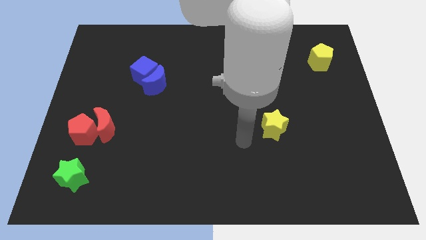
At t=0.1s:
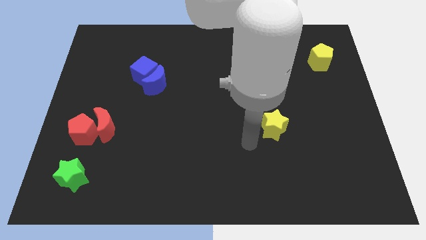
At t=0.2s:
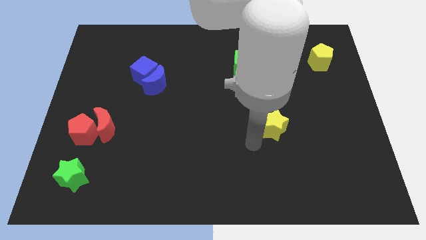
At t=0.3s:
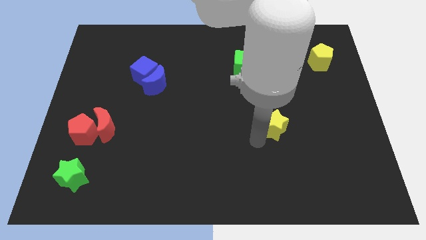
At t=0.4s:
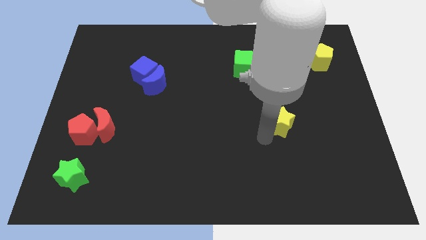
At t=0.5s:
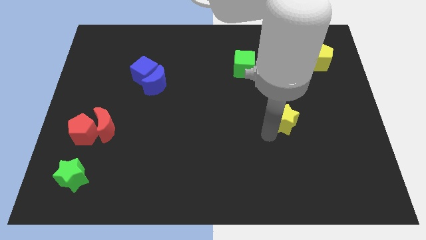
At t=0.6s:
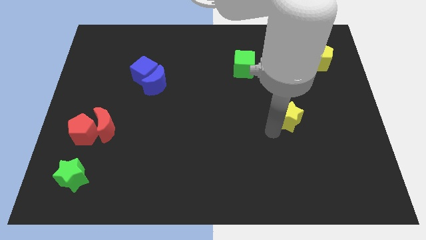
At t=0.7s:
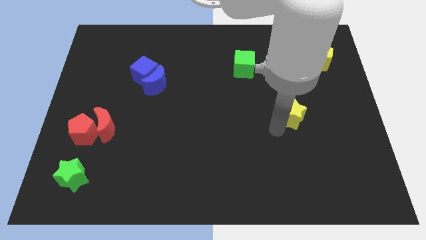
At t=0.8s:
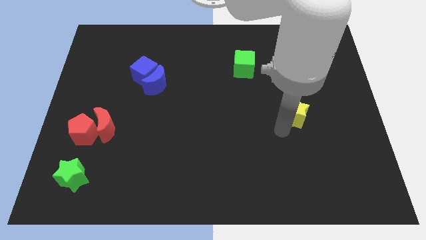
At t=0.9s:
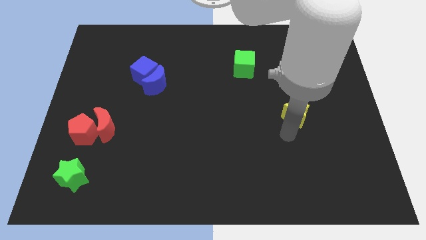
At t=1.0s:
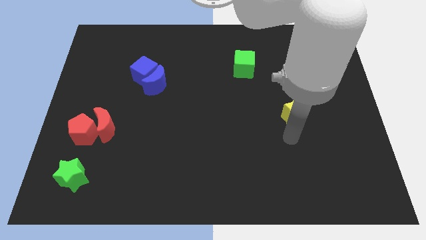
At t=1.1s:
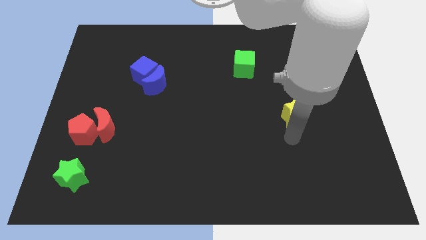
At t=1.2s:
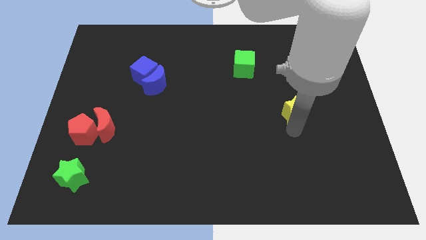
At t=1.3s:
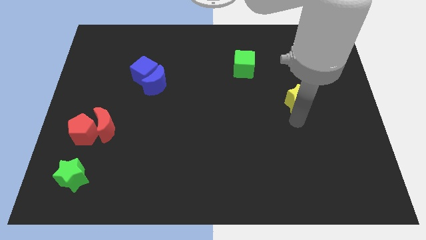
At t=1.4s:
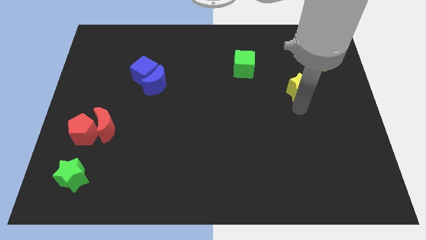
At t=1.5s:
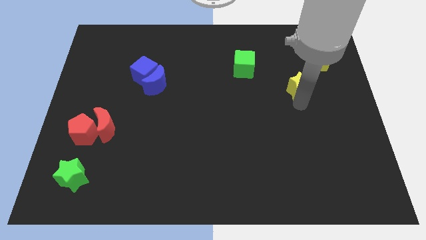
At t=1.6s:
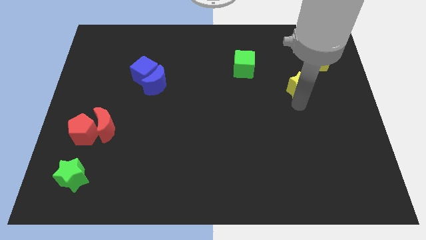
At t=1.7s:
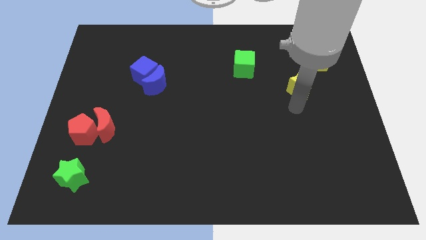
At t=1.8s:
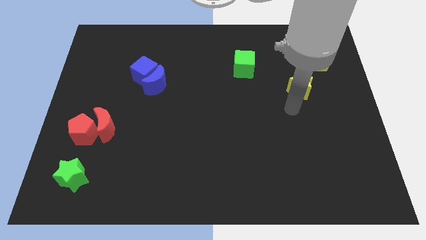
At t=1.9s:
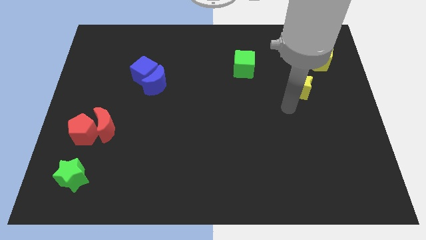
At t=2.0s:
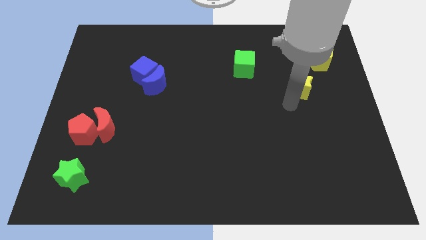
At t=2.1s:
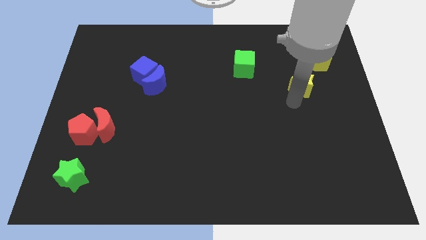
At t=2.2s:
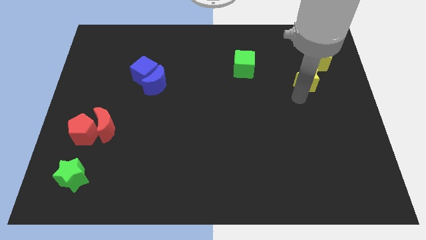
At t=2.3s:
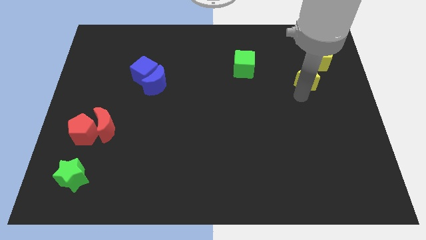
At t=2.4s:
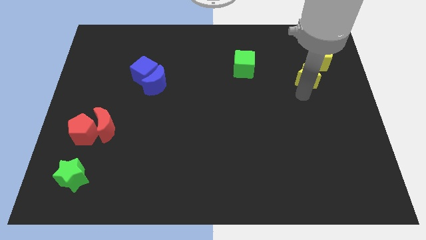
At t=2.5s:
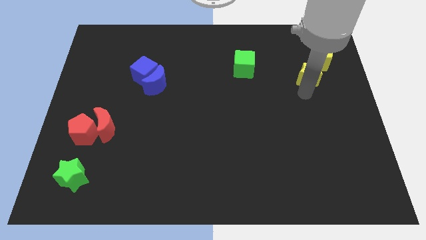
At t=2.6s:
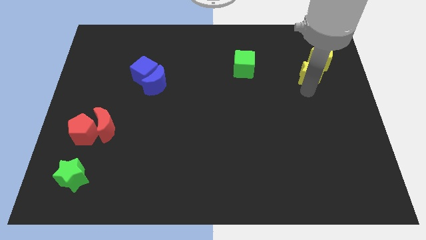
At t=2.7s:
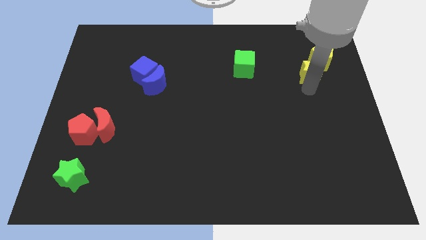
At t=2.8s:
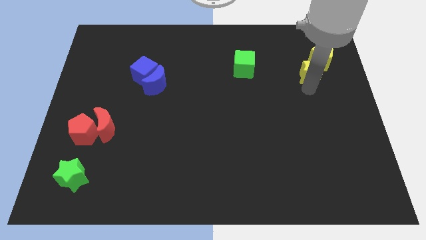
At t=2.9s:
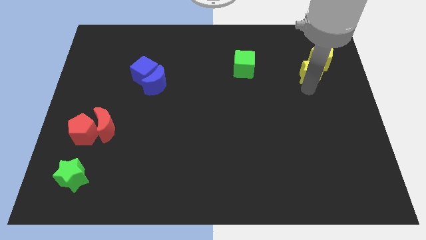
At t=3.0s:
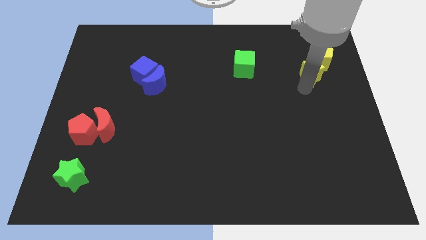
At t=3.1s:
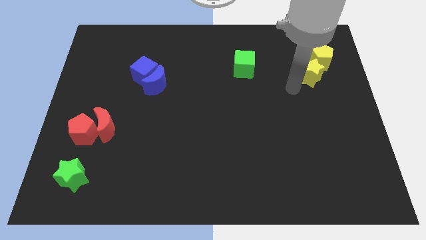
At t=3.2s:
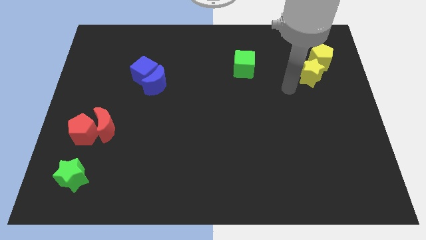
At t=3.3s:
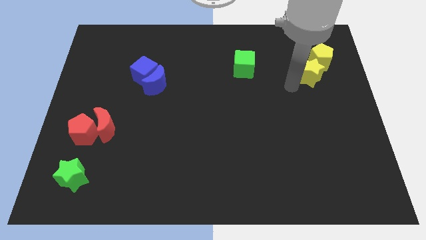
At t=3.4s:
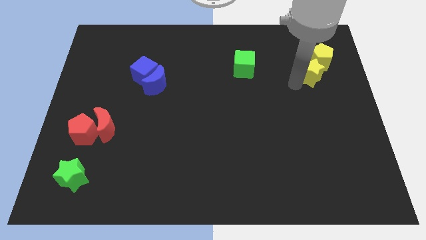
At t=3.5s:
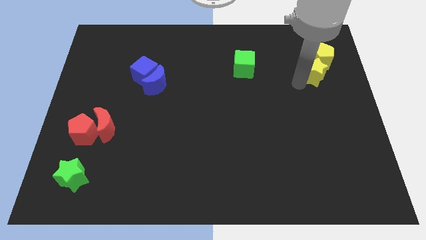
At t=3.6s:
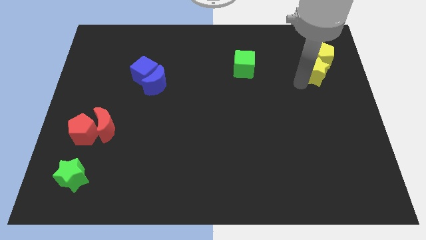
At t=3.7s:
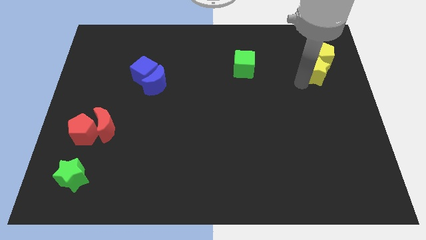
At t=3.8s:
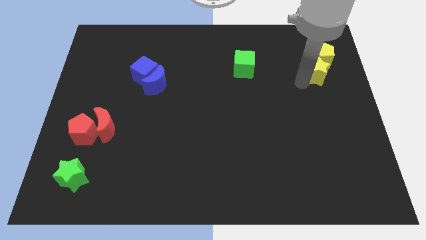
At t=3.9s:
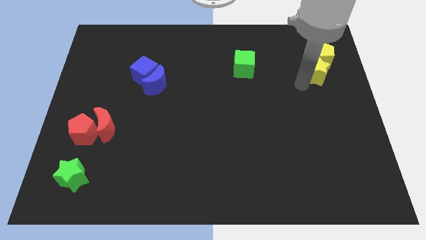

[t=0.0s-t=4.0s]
push the yellow star into the yellow pentagon

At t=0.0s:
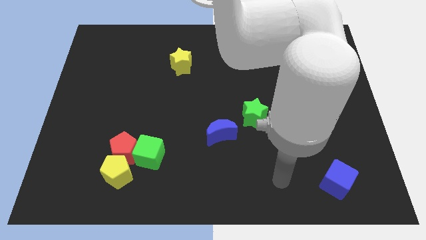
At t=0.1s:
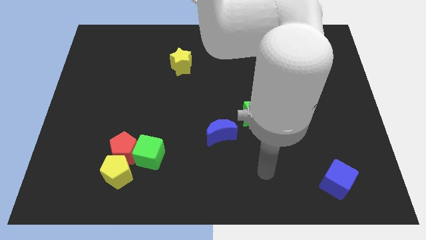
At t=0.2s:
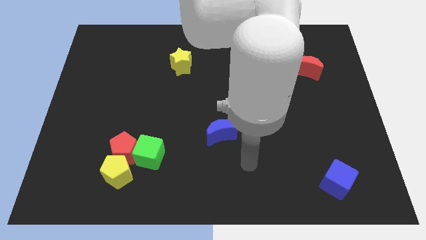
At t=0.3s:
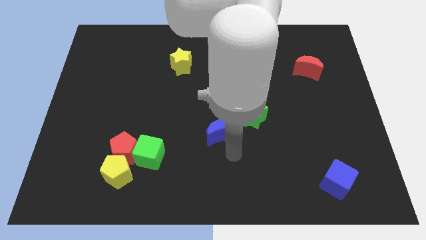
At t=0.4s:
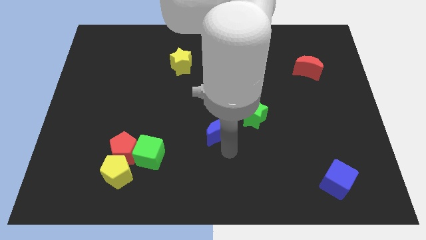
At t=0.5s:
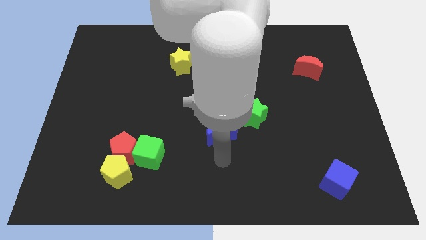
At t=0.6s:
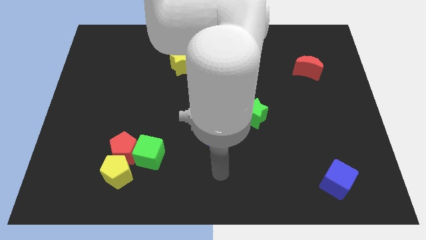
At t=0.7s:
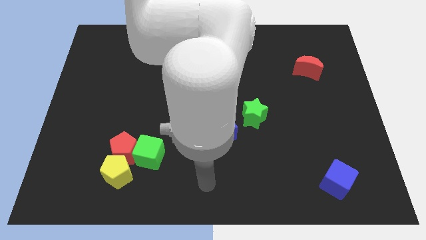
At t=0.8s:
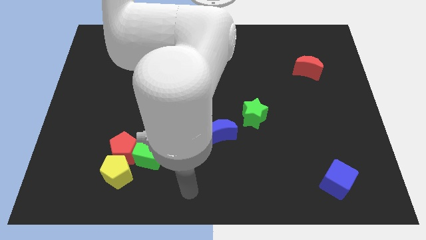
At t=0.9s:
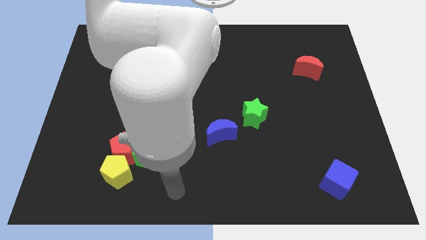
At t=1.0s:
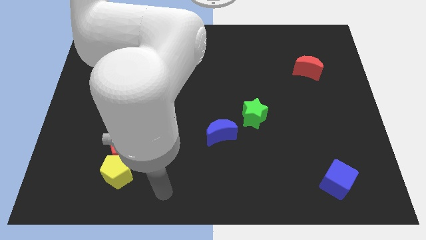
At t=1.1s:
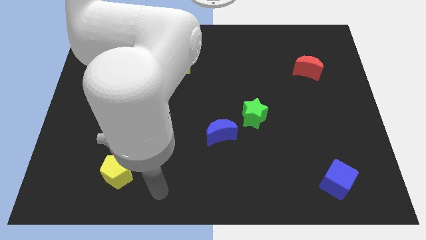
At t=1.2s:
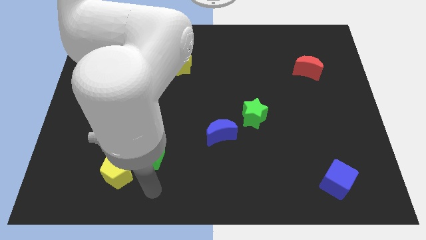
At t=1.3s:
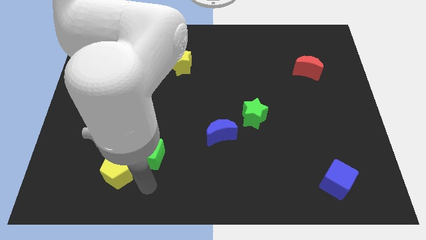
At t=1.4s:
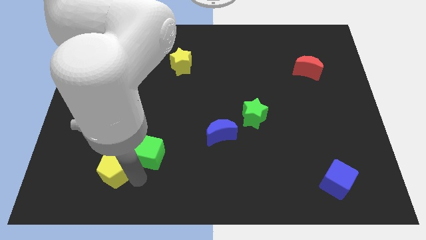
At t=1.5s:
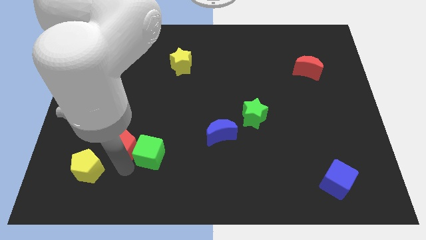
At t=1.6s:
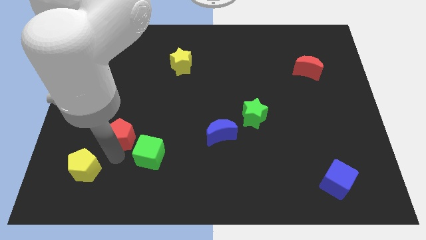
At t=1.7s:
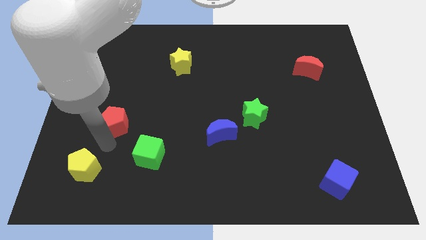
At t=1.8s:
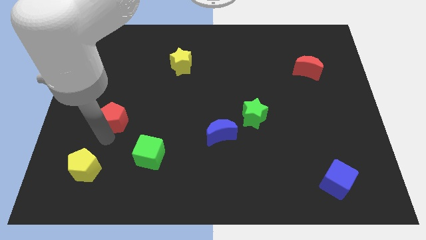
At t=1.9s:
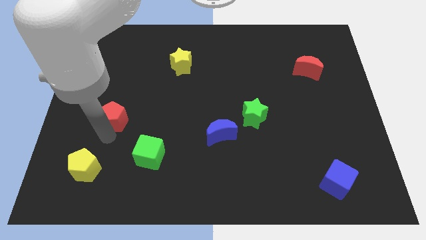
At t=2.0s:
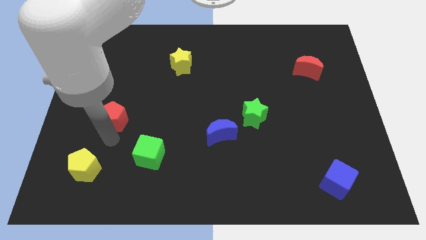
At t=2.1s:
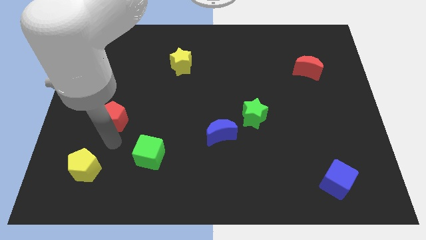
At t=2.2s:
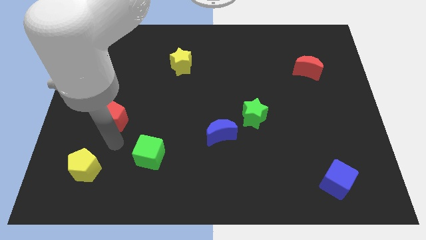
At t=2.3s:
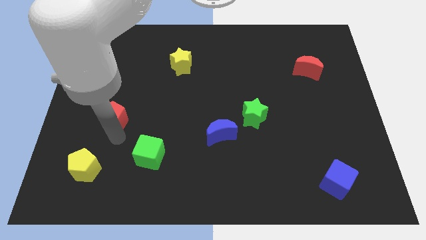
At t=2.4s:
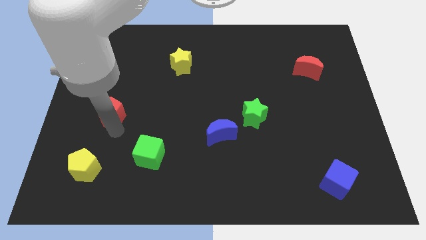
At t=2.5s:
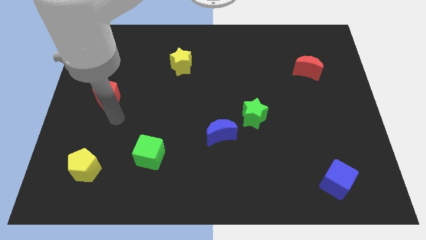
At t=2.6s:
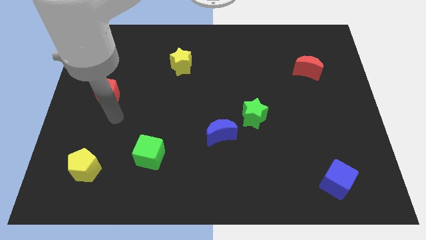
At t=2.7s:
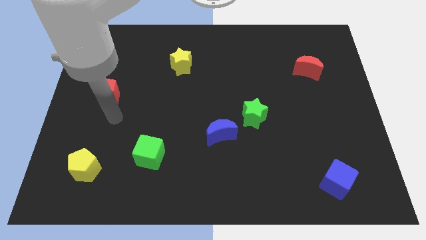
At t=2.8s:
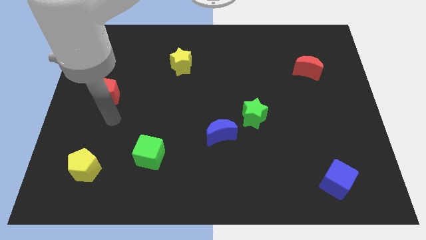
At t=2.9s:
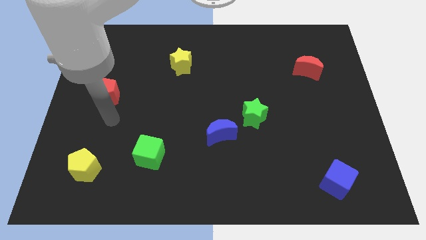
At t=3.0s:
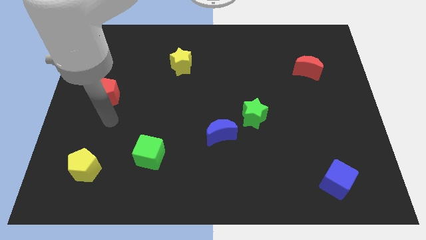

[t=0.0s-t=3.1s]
move the yellow pentagon and red pentagon away from the green cube

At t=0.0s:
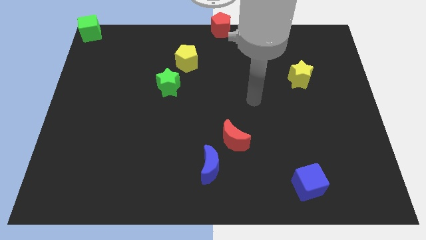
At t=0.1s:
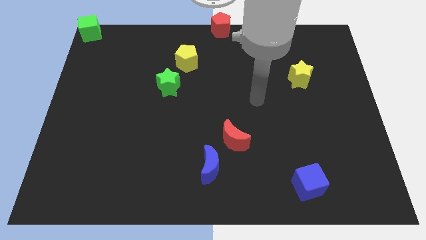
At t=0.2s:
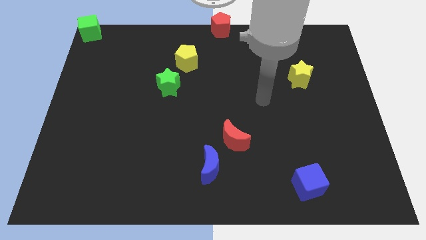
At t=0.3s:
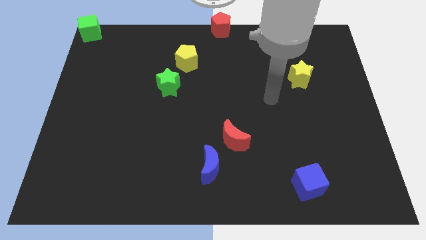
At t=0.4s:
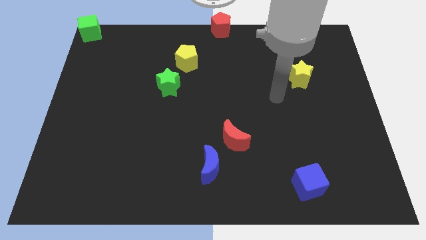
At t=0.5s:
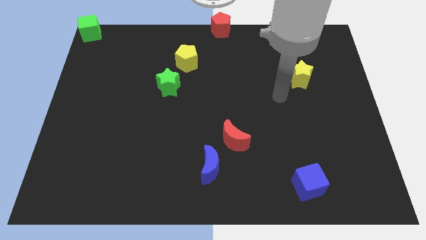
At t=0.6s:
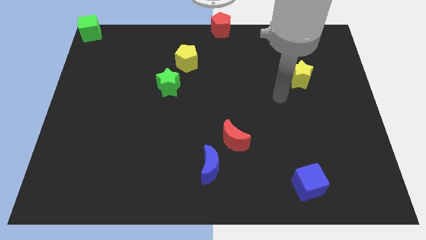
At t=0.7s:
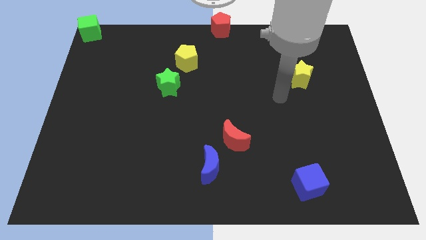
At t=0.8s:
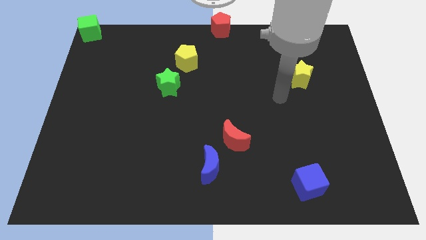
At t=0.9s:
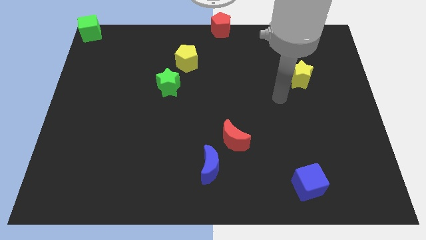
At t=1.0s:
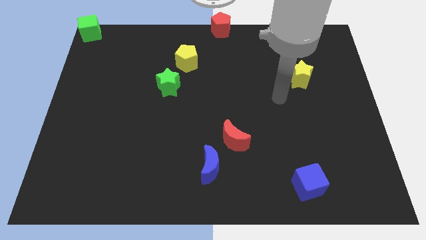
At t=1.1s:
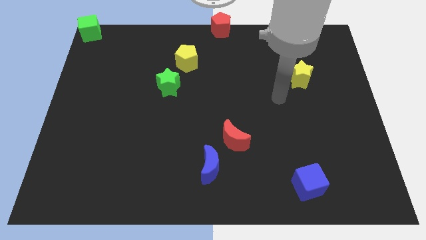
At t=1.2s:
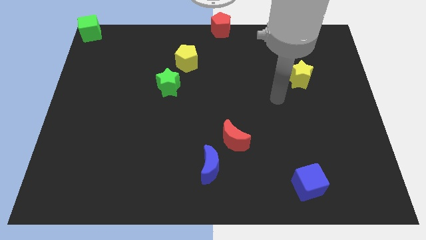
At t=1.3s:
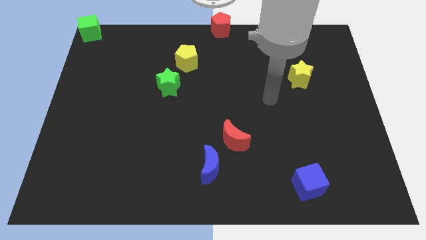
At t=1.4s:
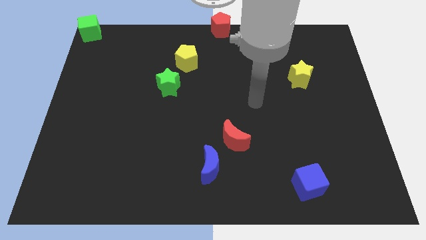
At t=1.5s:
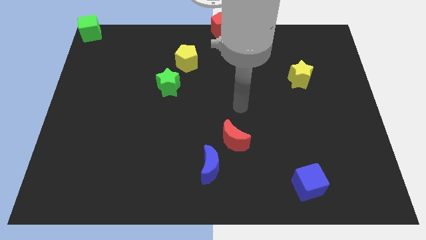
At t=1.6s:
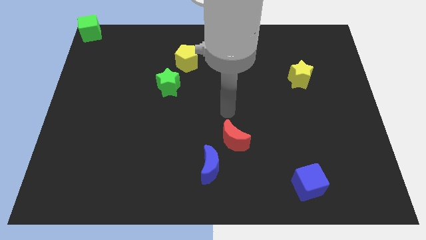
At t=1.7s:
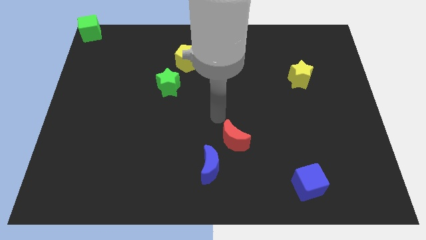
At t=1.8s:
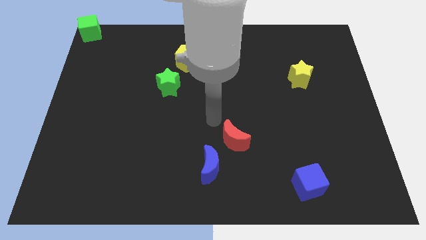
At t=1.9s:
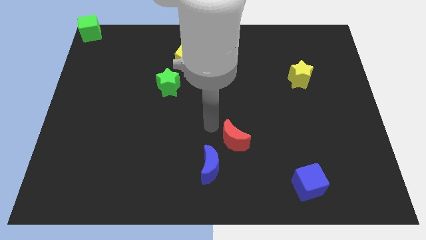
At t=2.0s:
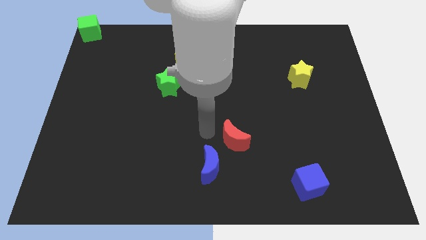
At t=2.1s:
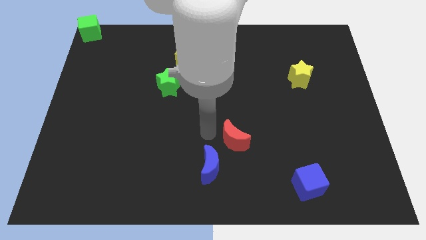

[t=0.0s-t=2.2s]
point your arm at the left of the red moon
